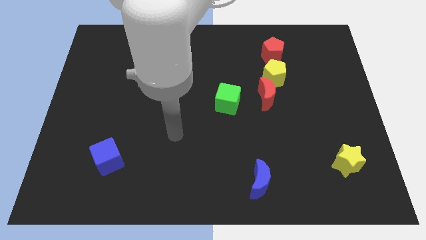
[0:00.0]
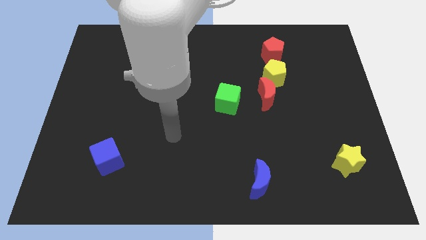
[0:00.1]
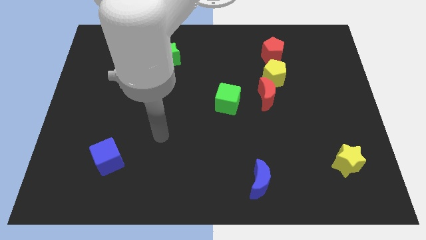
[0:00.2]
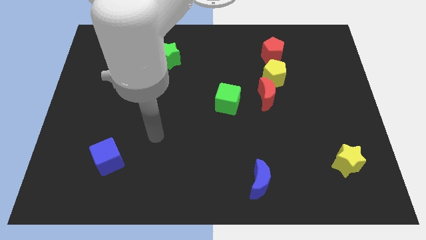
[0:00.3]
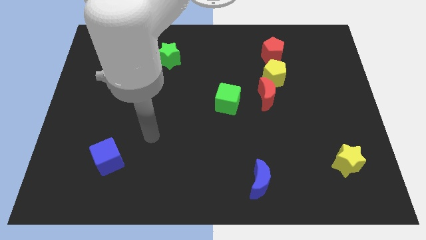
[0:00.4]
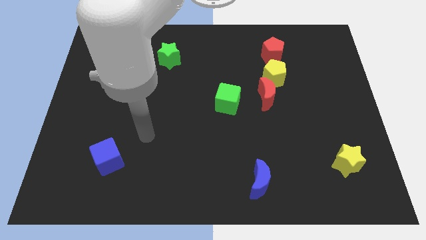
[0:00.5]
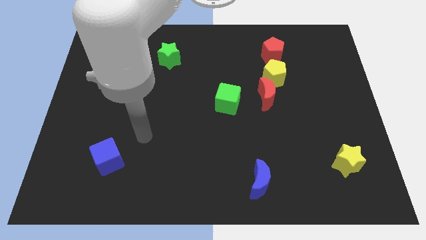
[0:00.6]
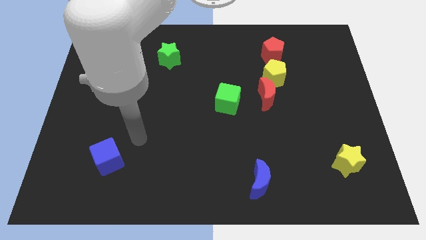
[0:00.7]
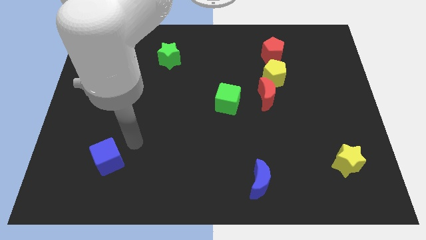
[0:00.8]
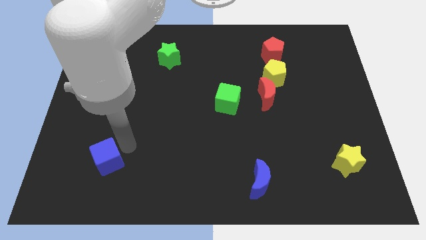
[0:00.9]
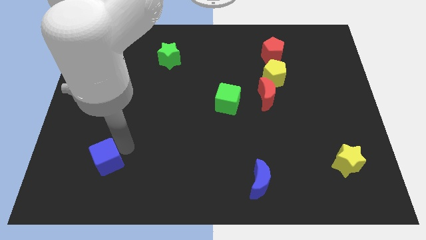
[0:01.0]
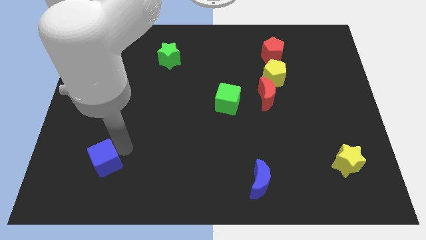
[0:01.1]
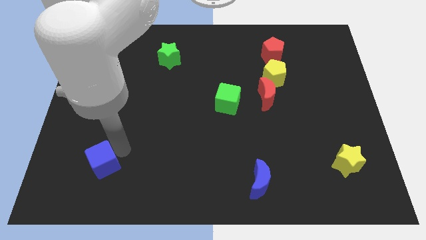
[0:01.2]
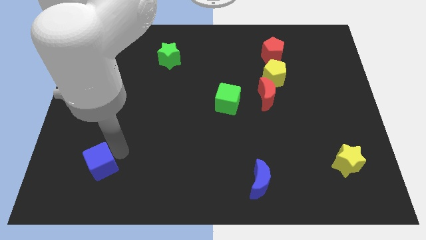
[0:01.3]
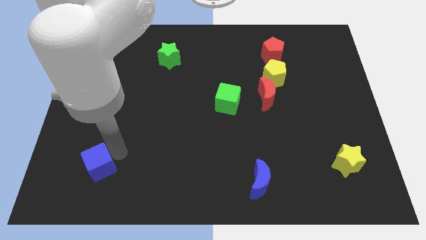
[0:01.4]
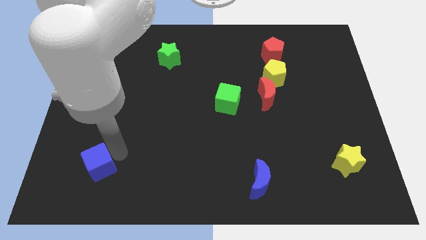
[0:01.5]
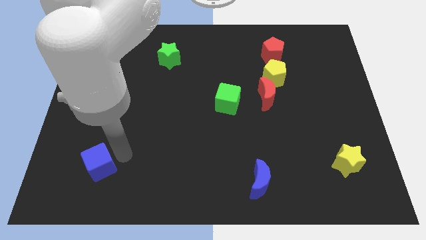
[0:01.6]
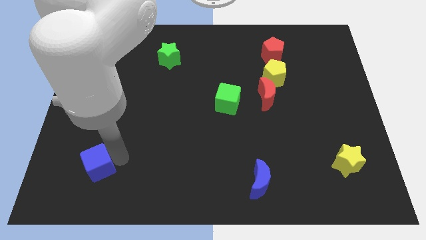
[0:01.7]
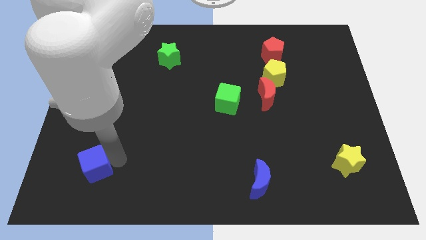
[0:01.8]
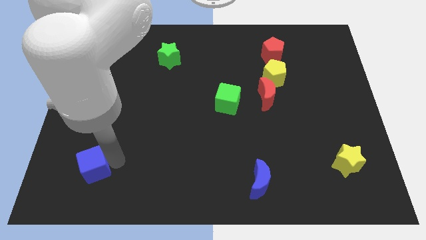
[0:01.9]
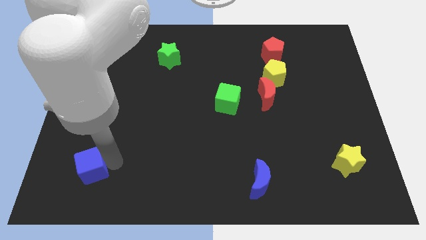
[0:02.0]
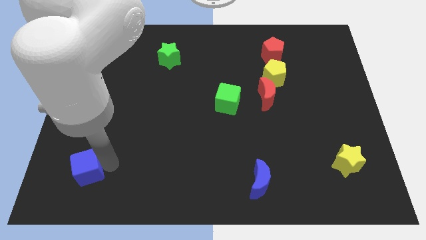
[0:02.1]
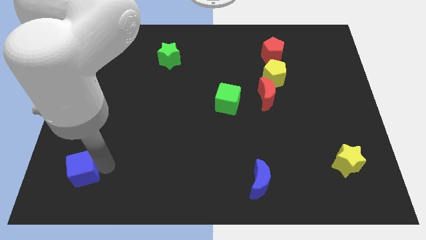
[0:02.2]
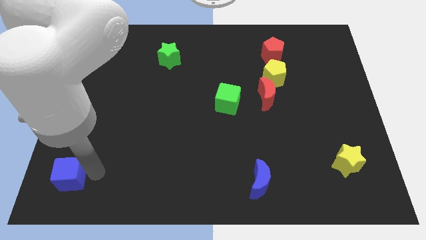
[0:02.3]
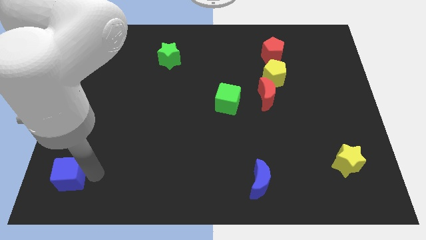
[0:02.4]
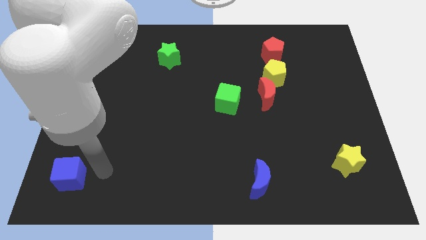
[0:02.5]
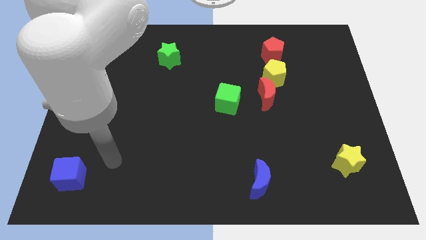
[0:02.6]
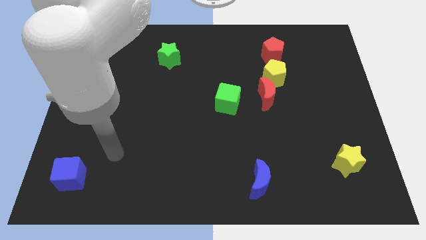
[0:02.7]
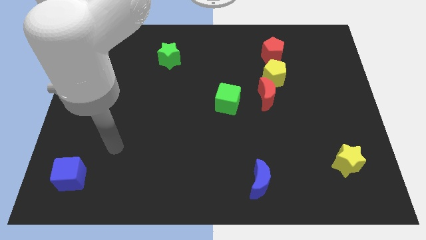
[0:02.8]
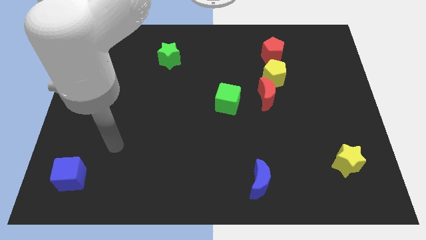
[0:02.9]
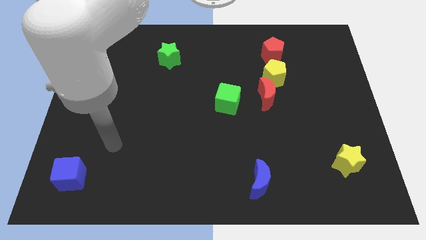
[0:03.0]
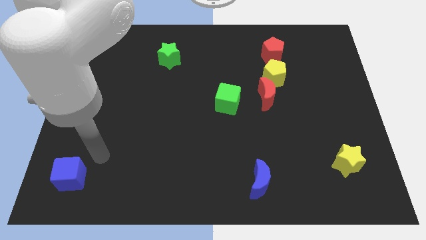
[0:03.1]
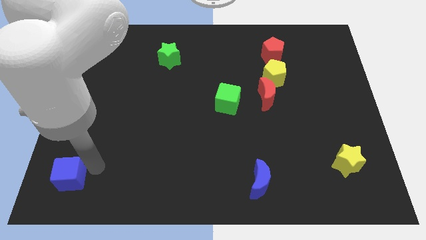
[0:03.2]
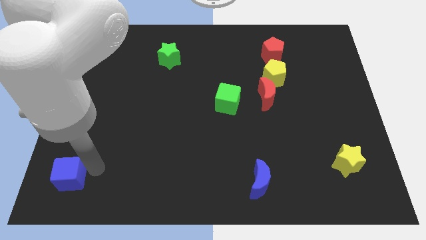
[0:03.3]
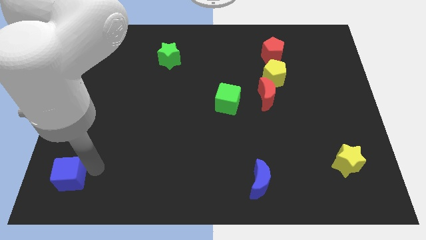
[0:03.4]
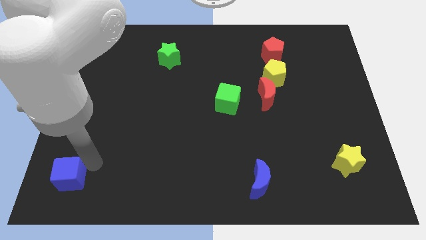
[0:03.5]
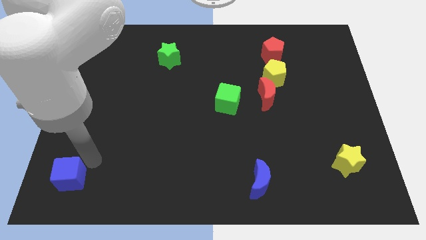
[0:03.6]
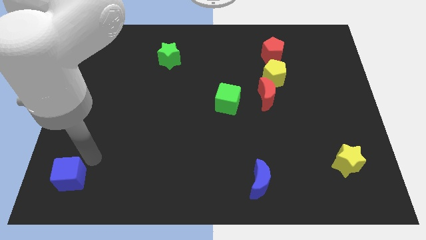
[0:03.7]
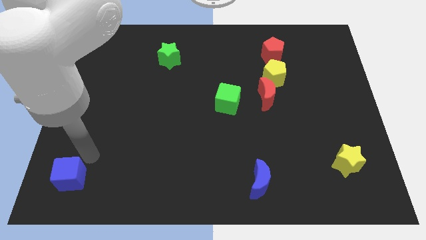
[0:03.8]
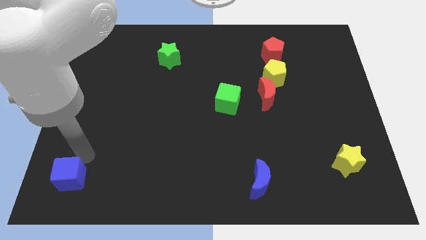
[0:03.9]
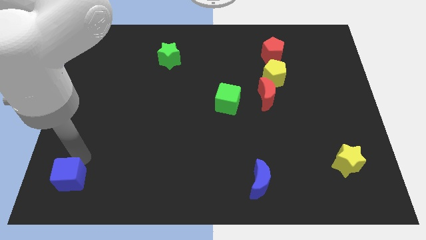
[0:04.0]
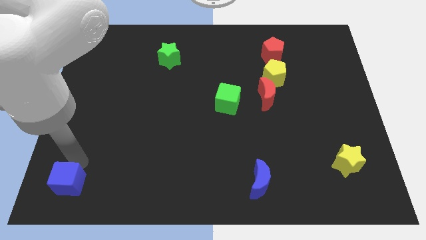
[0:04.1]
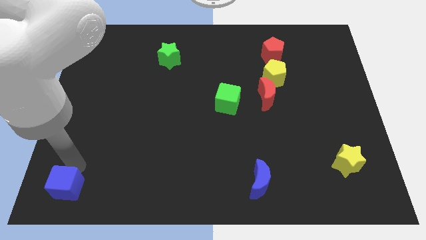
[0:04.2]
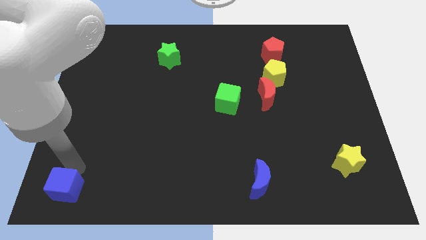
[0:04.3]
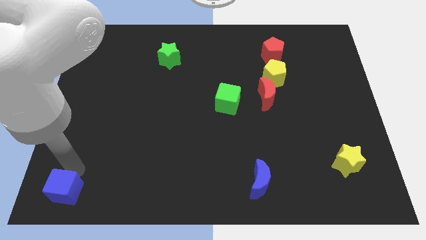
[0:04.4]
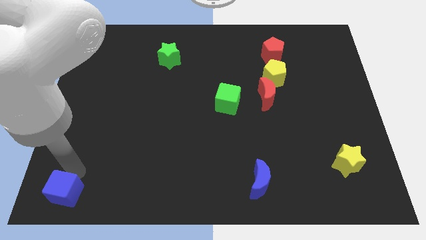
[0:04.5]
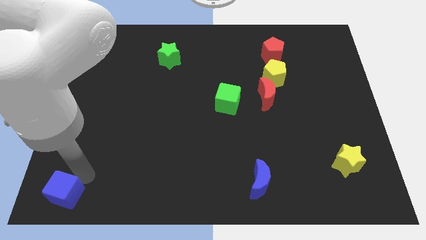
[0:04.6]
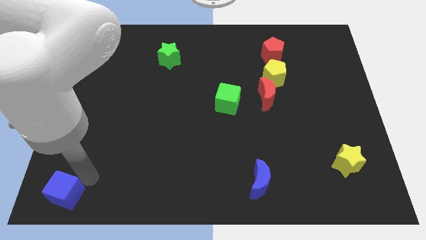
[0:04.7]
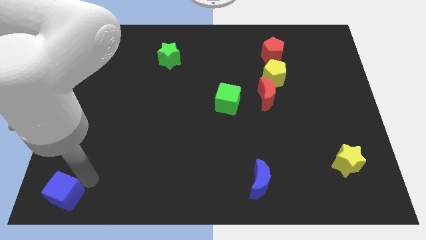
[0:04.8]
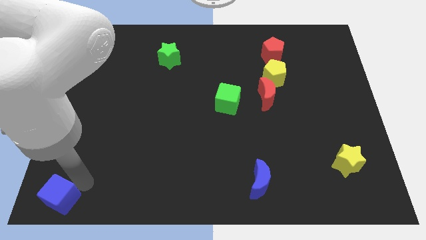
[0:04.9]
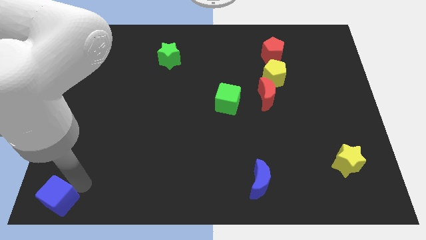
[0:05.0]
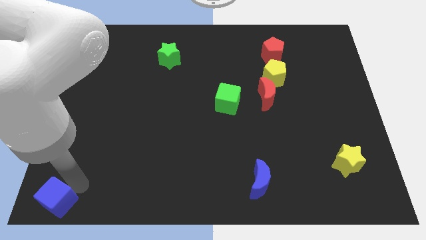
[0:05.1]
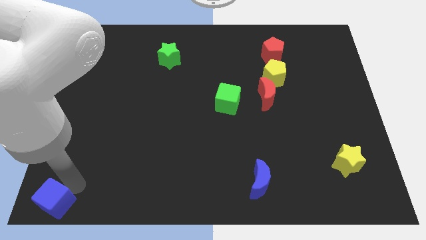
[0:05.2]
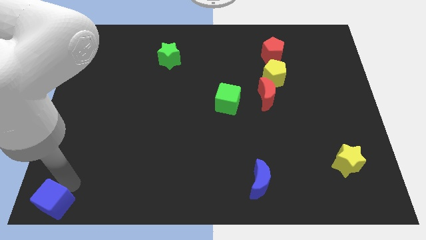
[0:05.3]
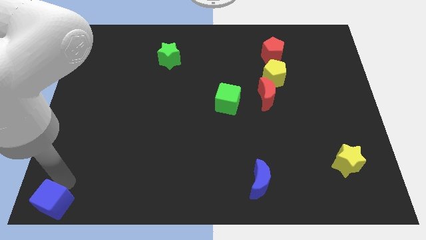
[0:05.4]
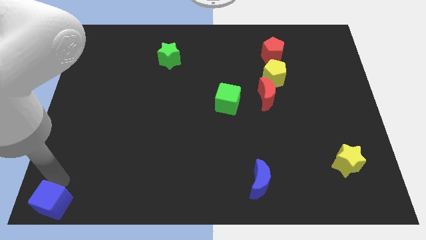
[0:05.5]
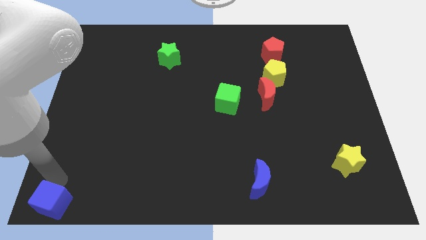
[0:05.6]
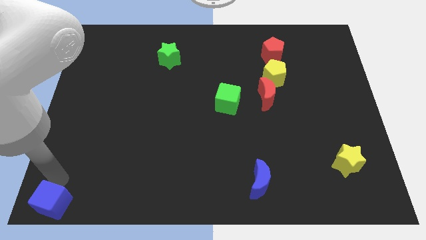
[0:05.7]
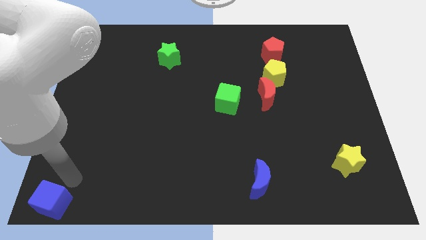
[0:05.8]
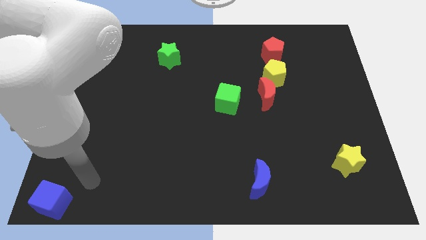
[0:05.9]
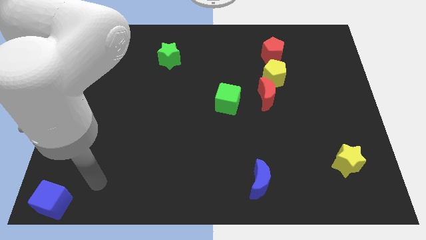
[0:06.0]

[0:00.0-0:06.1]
move blue cube to the bottom left corner of the board

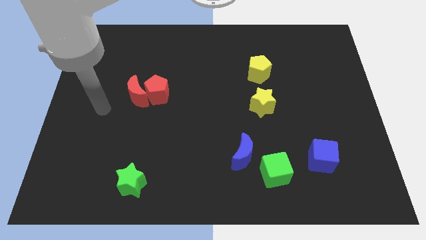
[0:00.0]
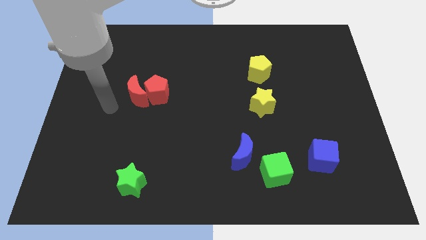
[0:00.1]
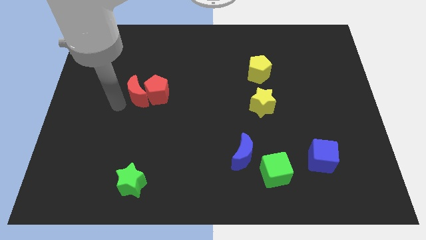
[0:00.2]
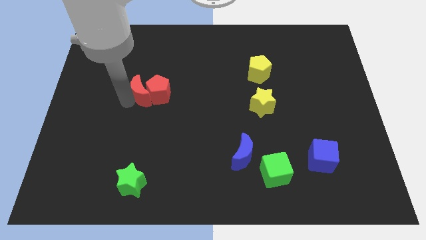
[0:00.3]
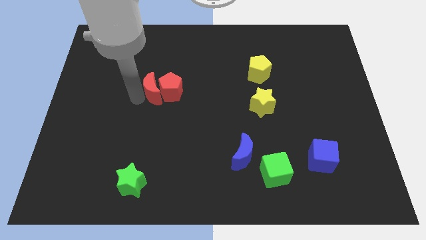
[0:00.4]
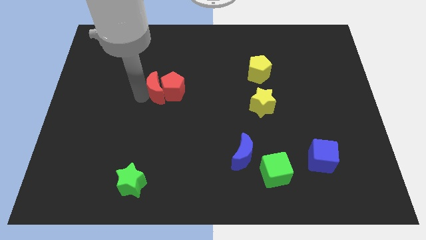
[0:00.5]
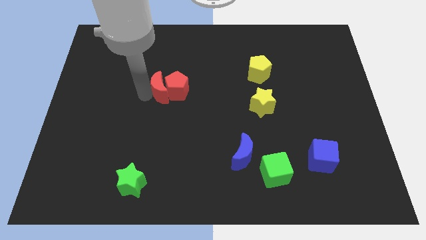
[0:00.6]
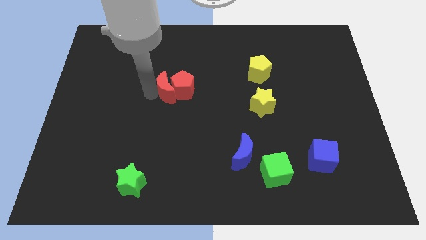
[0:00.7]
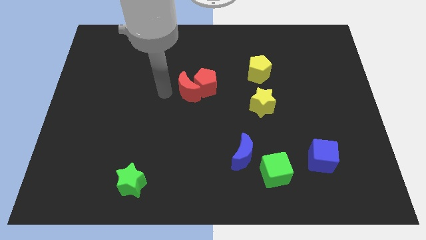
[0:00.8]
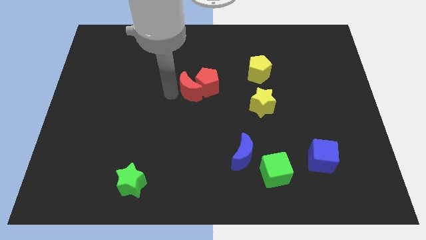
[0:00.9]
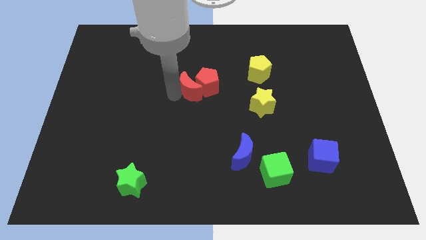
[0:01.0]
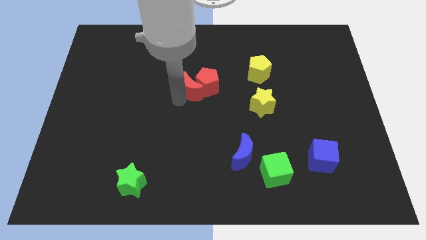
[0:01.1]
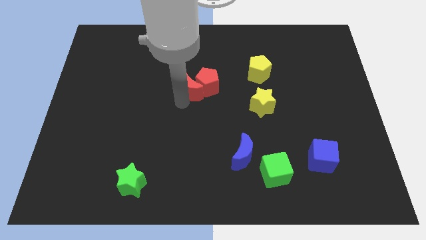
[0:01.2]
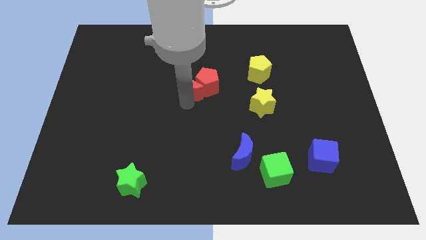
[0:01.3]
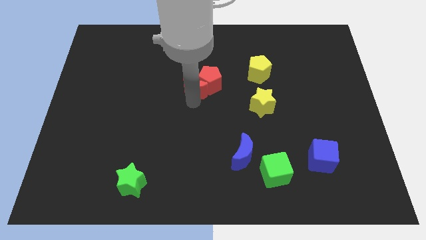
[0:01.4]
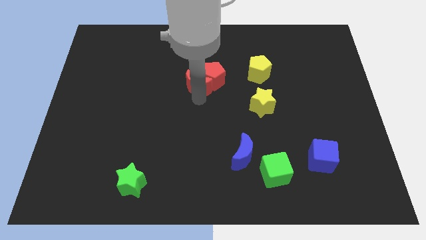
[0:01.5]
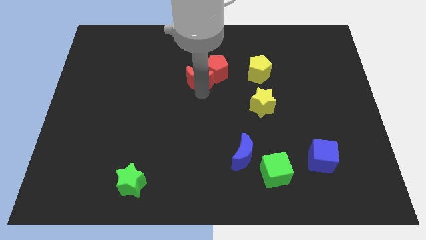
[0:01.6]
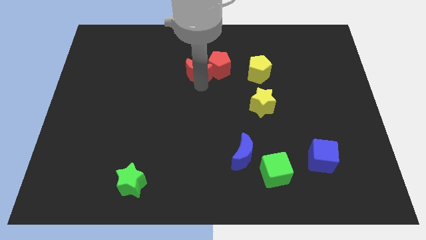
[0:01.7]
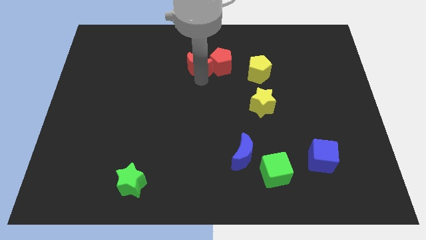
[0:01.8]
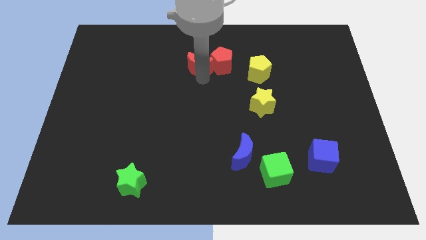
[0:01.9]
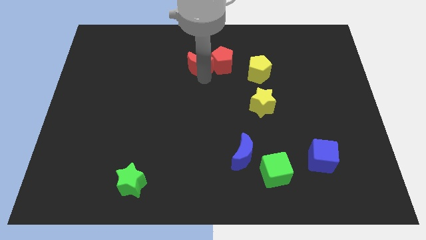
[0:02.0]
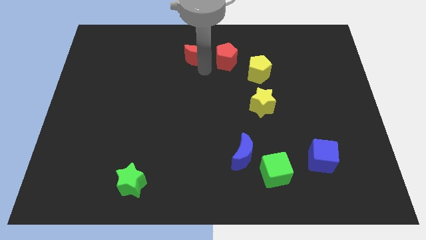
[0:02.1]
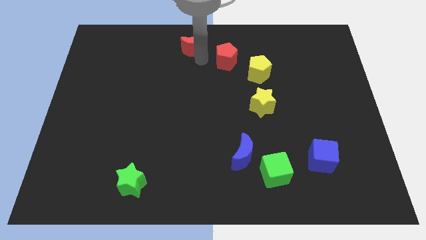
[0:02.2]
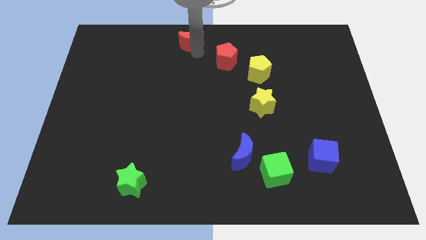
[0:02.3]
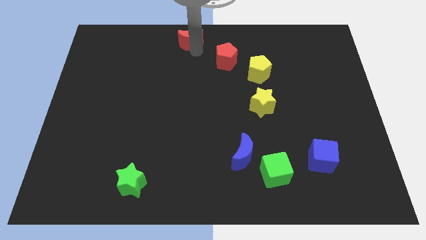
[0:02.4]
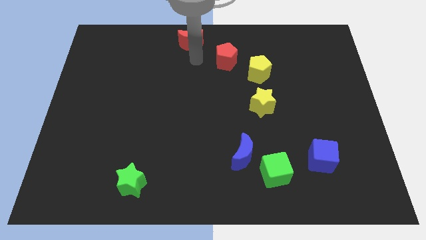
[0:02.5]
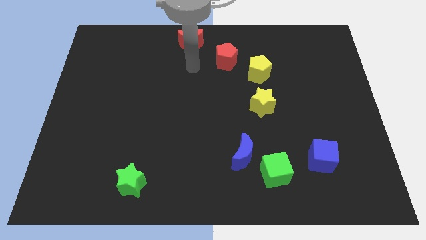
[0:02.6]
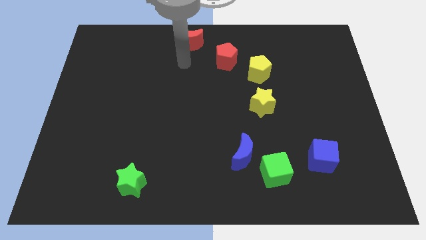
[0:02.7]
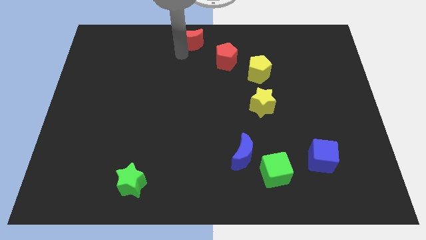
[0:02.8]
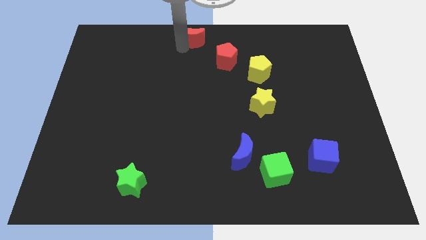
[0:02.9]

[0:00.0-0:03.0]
separate red moon from red pentagon
